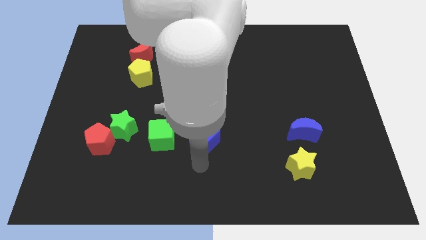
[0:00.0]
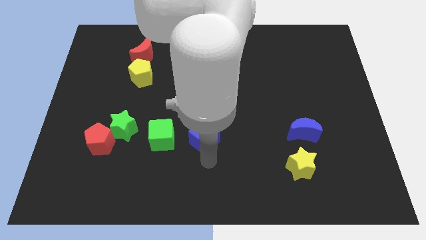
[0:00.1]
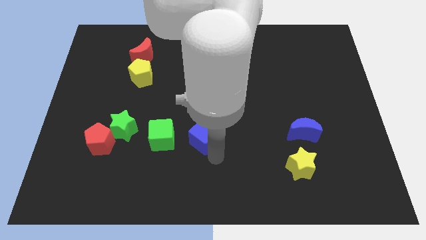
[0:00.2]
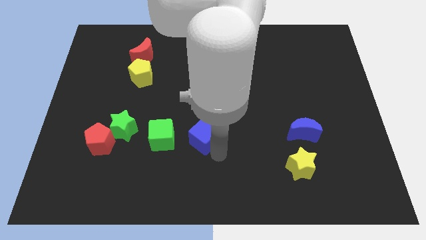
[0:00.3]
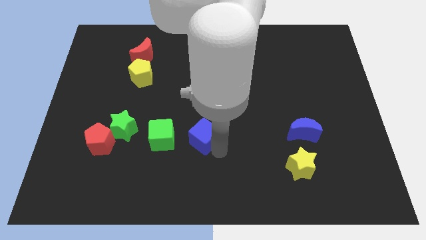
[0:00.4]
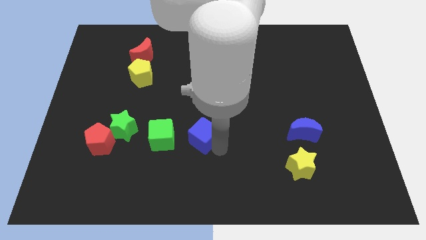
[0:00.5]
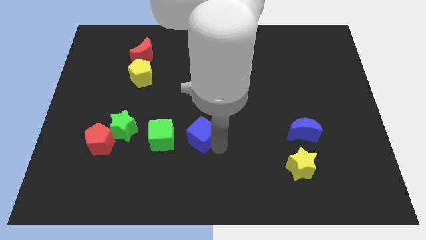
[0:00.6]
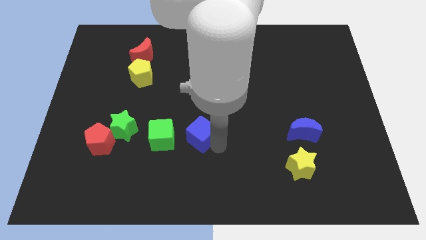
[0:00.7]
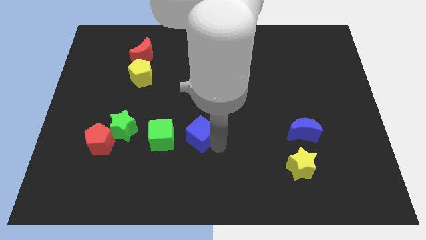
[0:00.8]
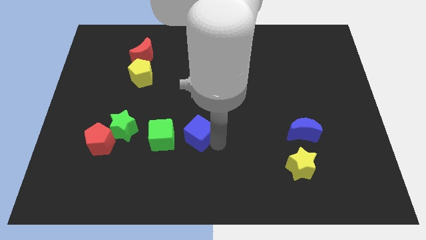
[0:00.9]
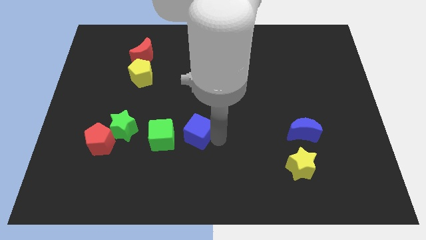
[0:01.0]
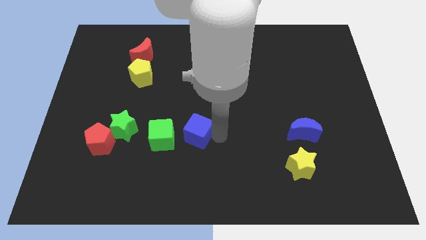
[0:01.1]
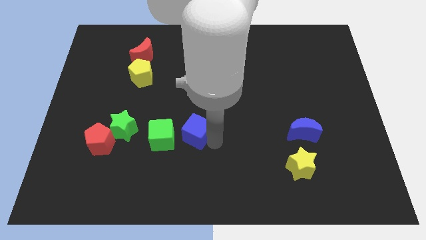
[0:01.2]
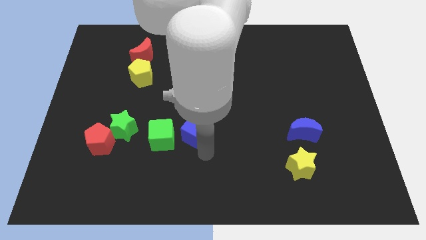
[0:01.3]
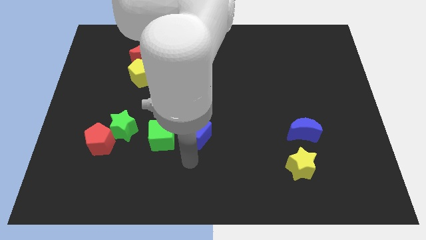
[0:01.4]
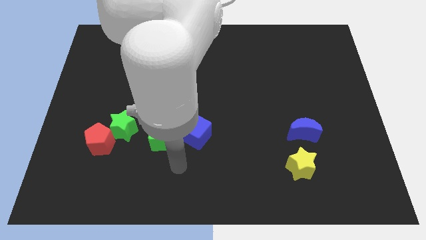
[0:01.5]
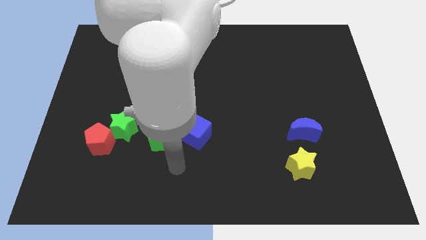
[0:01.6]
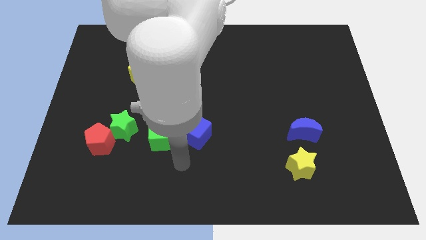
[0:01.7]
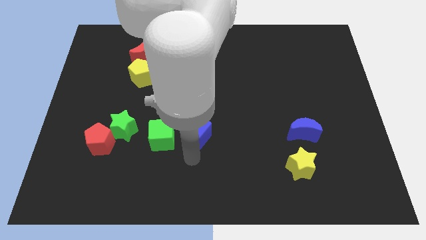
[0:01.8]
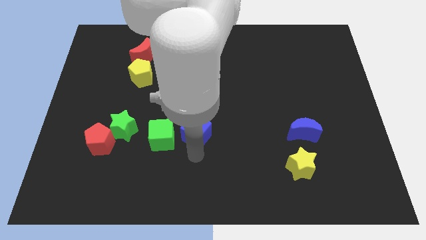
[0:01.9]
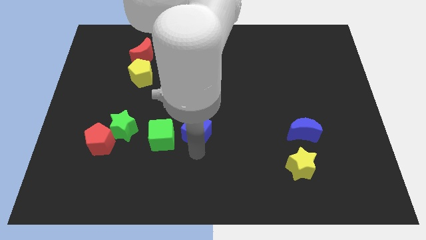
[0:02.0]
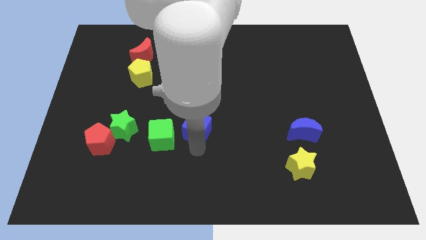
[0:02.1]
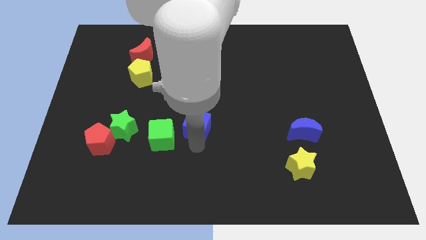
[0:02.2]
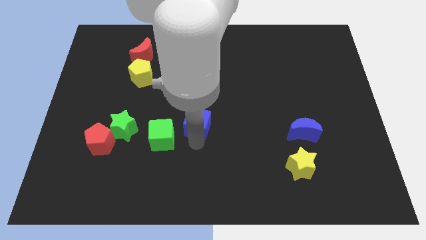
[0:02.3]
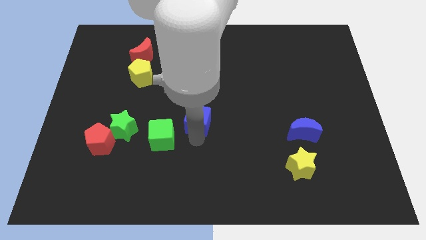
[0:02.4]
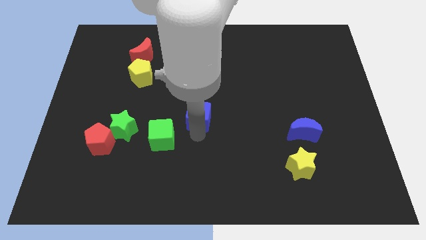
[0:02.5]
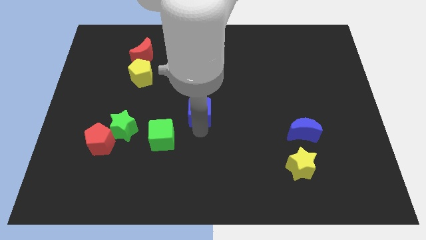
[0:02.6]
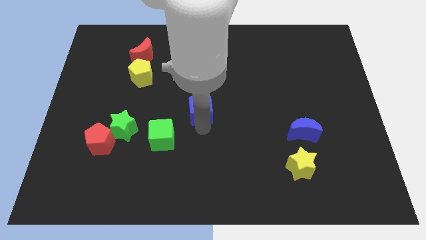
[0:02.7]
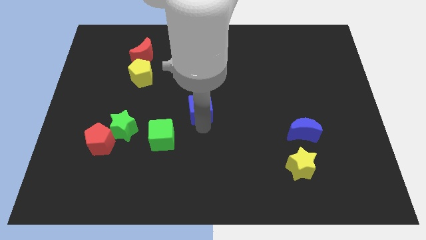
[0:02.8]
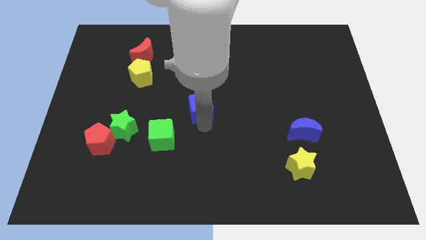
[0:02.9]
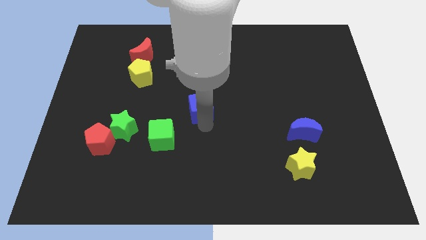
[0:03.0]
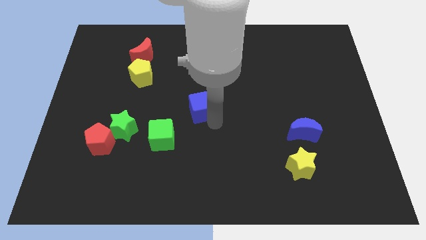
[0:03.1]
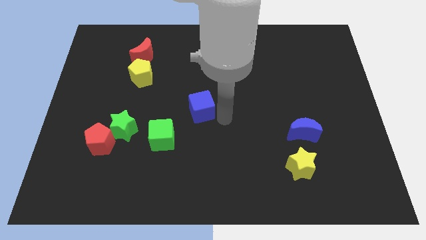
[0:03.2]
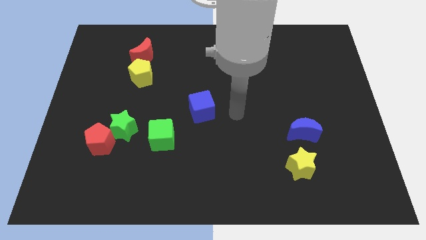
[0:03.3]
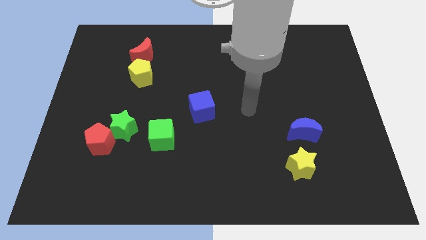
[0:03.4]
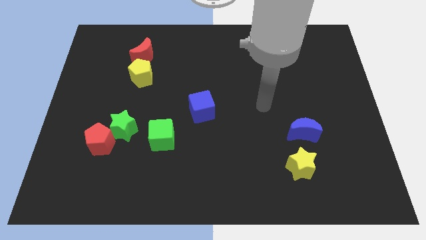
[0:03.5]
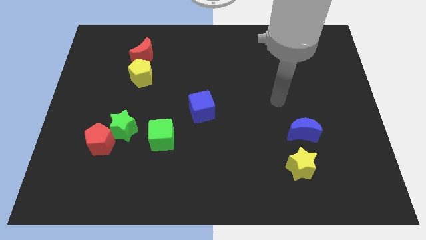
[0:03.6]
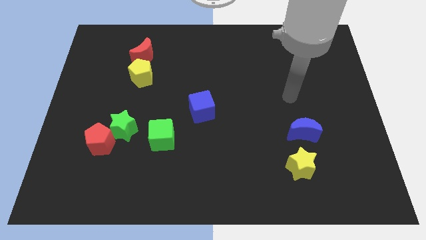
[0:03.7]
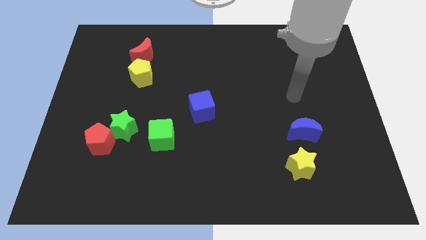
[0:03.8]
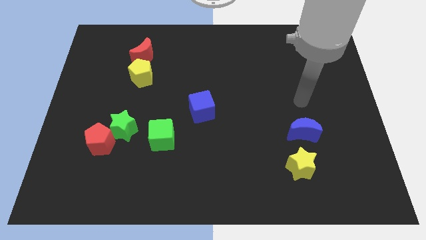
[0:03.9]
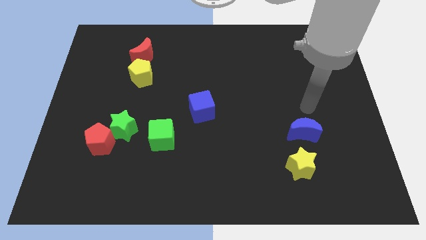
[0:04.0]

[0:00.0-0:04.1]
place blue cube diagonal to green cube
